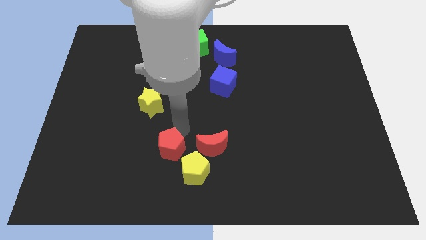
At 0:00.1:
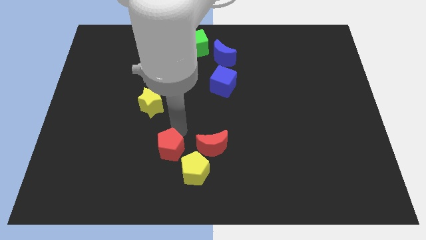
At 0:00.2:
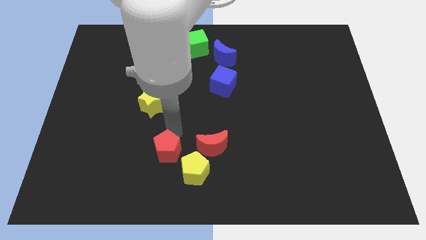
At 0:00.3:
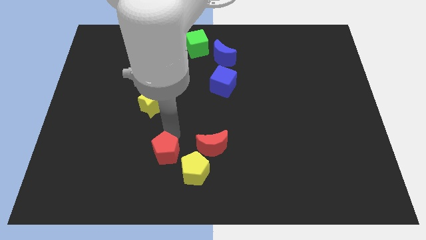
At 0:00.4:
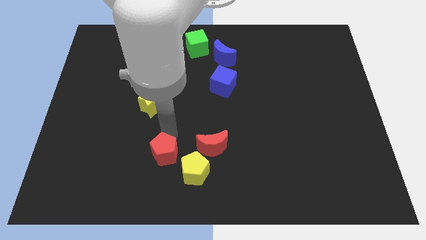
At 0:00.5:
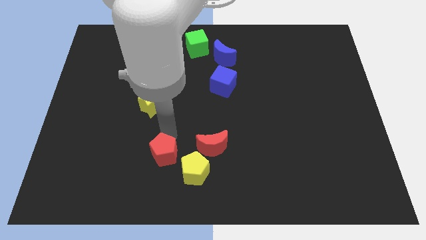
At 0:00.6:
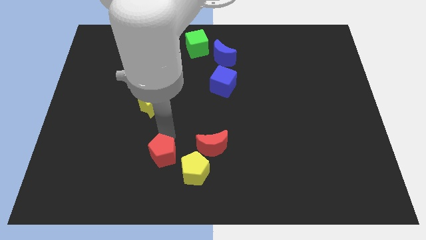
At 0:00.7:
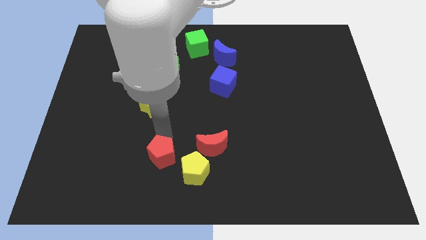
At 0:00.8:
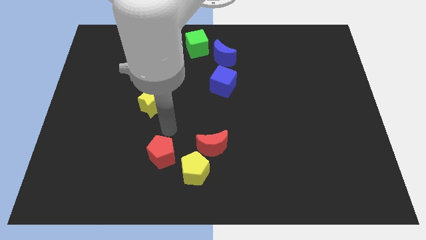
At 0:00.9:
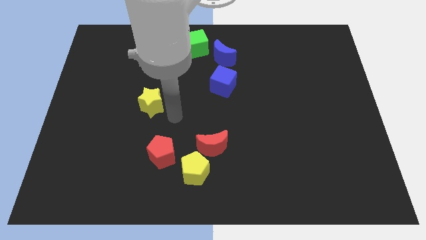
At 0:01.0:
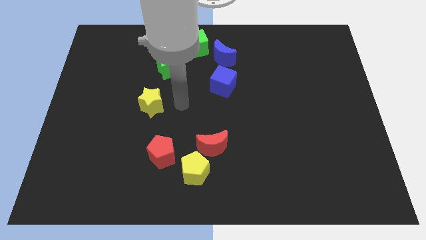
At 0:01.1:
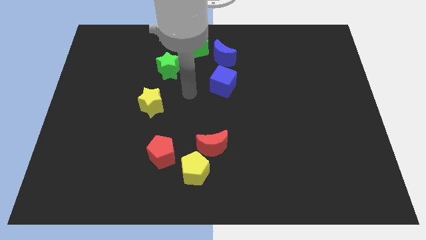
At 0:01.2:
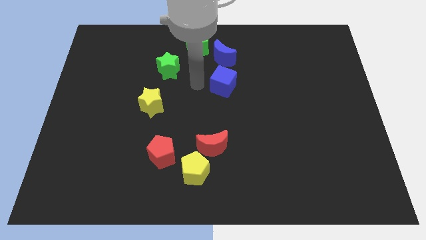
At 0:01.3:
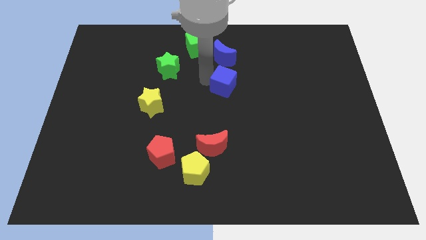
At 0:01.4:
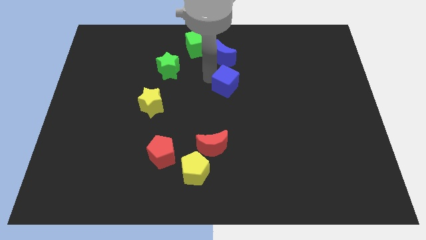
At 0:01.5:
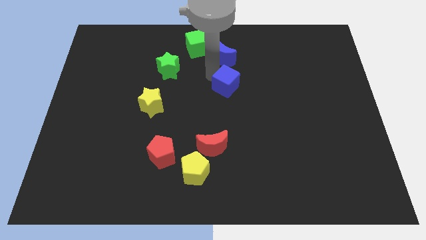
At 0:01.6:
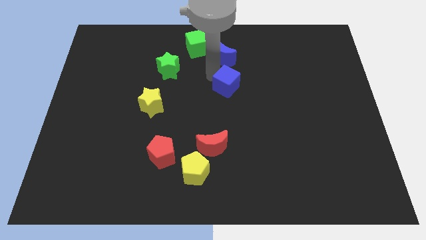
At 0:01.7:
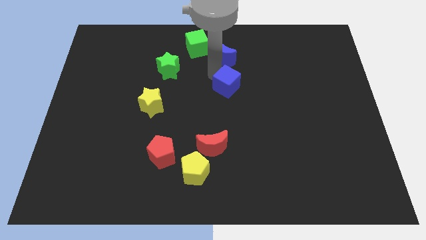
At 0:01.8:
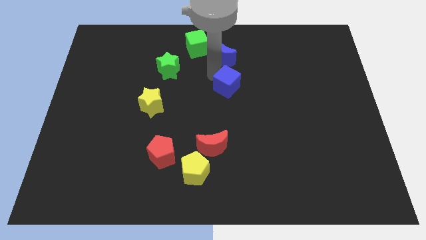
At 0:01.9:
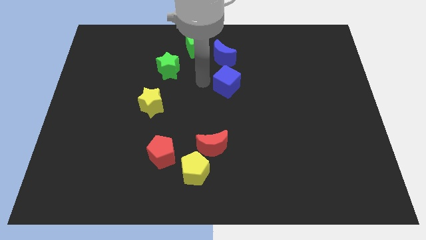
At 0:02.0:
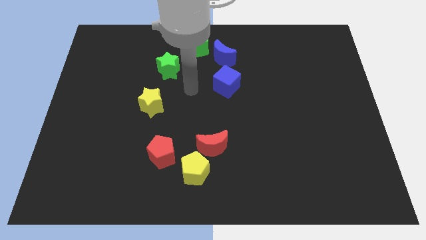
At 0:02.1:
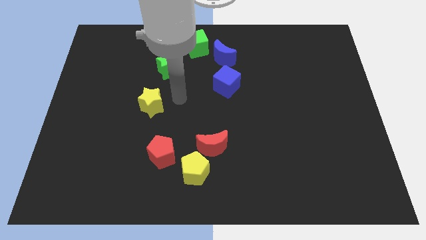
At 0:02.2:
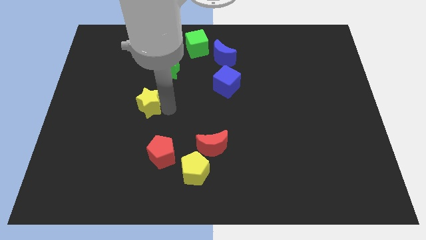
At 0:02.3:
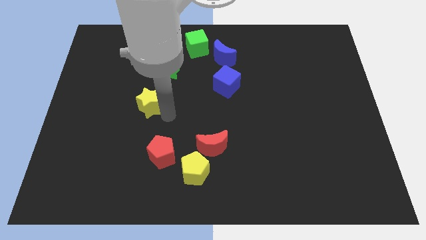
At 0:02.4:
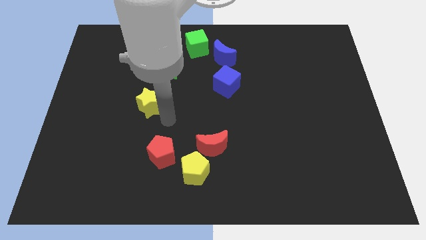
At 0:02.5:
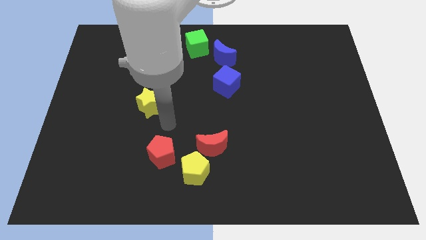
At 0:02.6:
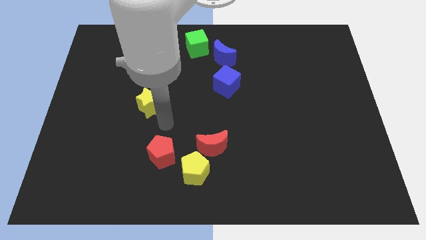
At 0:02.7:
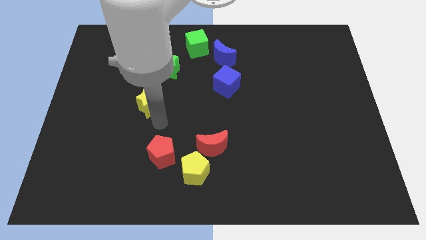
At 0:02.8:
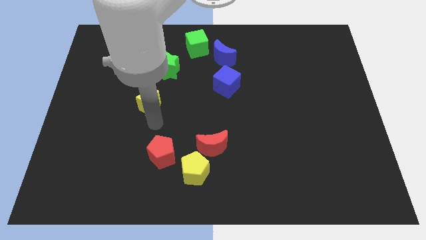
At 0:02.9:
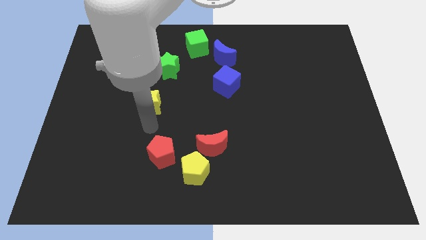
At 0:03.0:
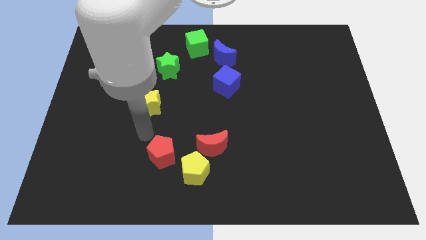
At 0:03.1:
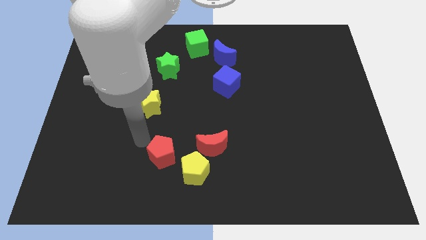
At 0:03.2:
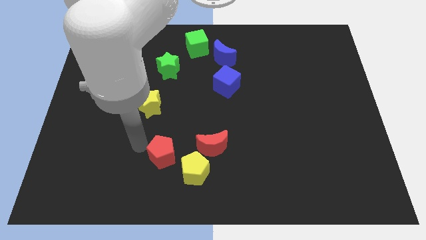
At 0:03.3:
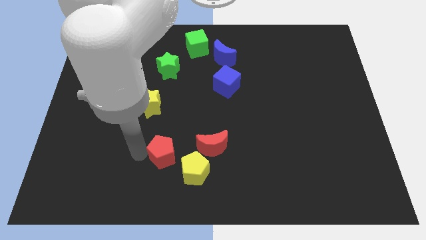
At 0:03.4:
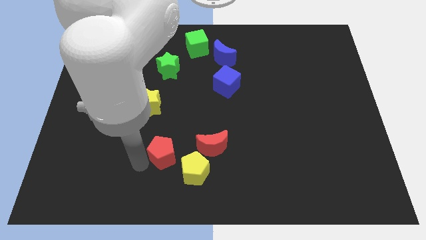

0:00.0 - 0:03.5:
adjust the blue cube yellow star along with the red pentagon

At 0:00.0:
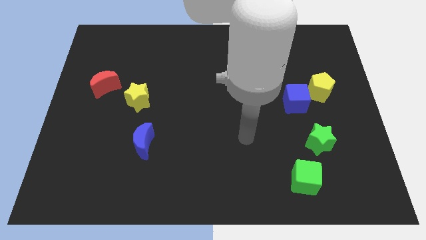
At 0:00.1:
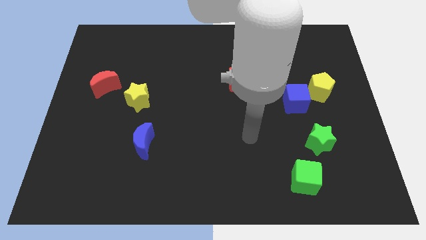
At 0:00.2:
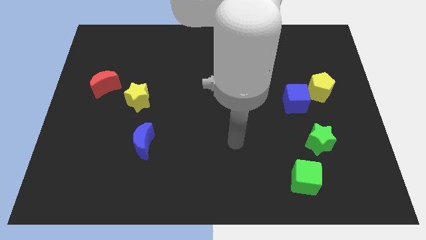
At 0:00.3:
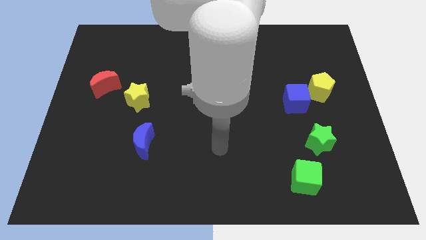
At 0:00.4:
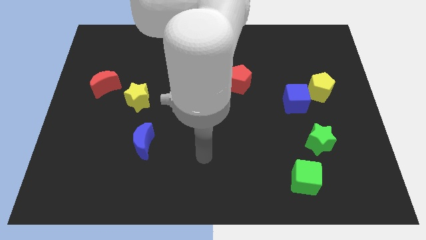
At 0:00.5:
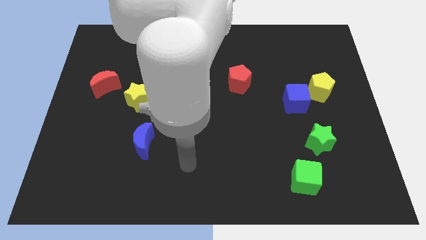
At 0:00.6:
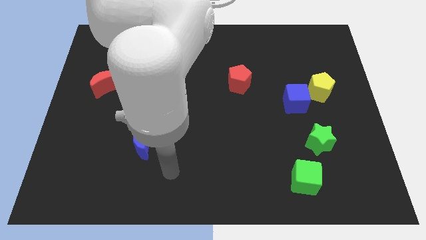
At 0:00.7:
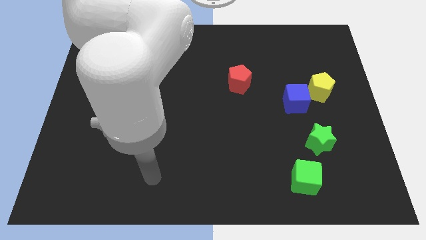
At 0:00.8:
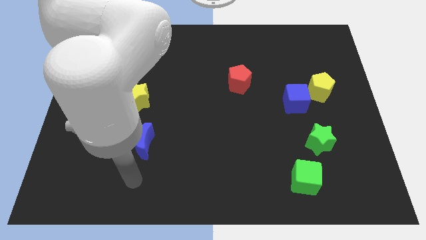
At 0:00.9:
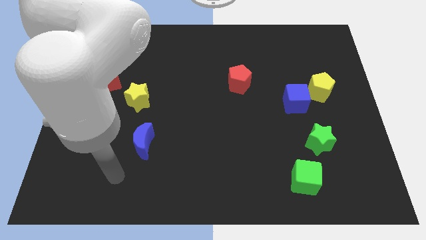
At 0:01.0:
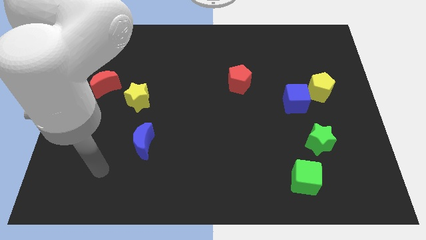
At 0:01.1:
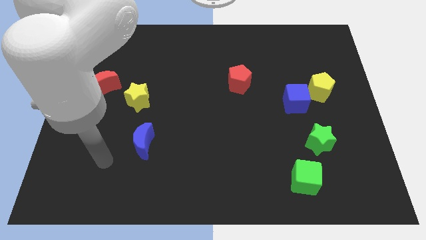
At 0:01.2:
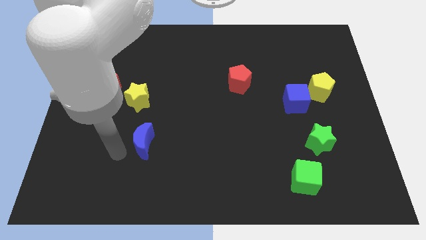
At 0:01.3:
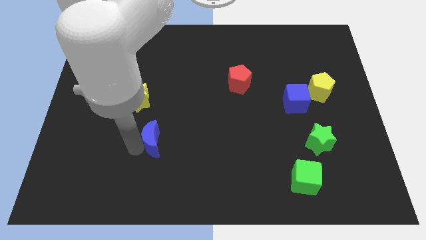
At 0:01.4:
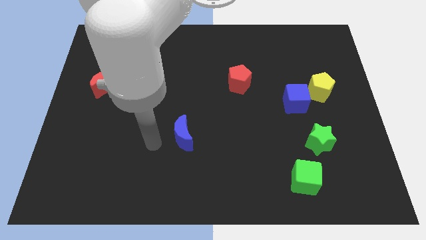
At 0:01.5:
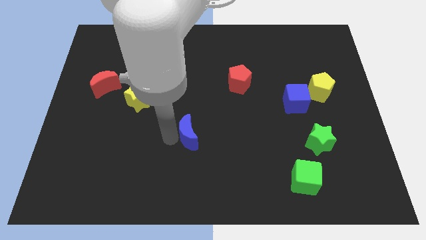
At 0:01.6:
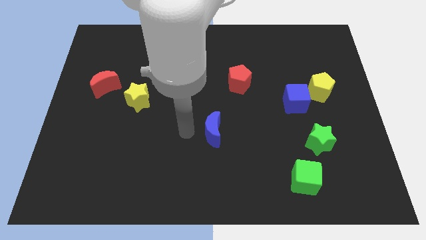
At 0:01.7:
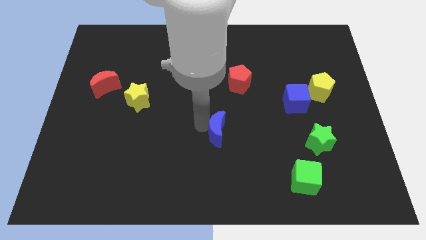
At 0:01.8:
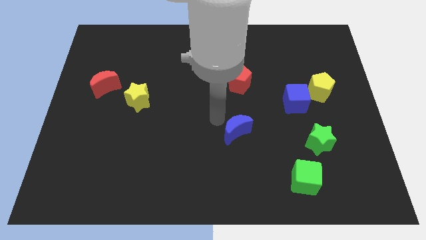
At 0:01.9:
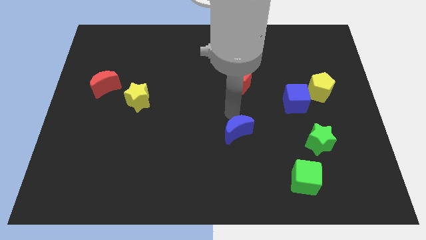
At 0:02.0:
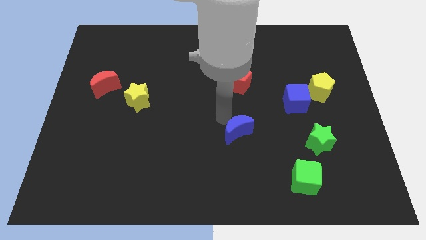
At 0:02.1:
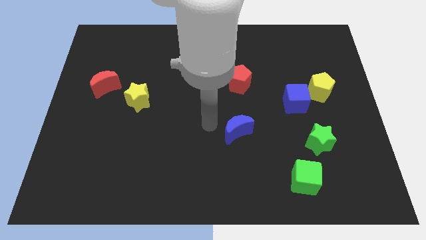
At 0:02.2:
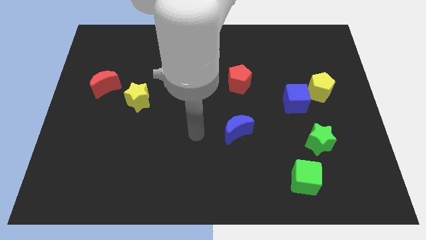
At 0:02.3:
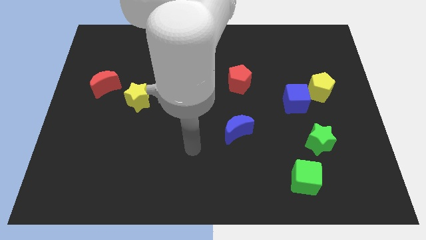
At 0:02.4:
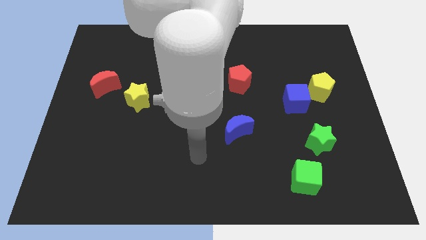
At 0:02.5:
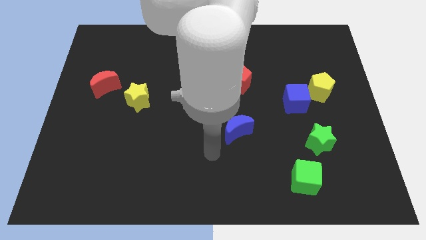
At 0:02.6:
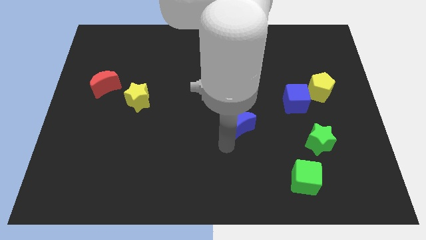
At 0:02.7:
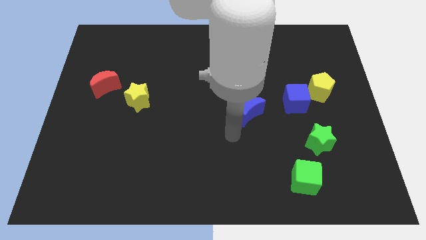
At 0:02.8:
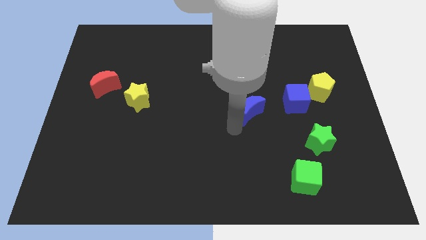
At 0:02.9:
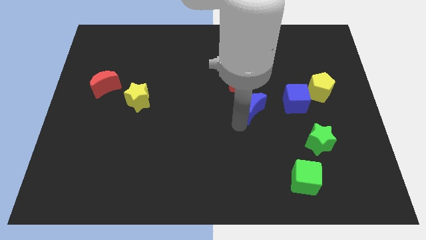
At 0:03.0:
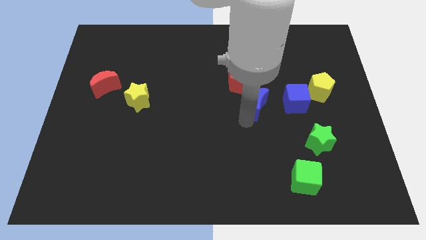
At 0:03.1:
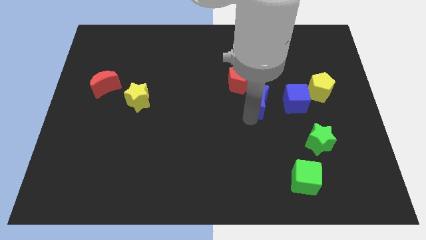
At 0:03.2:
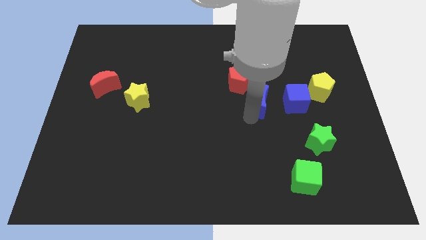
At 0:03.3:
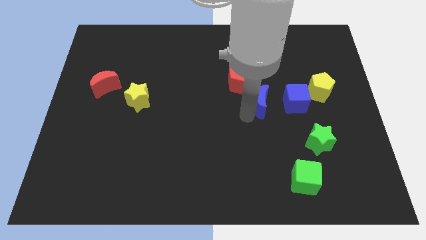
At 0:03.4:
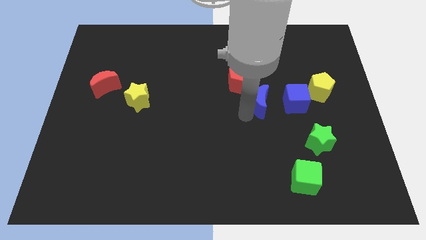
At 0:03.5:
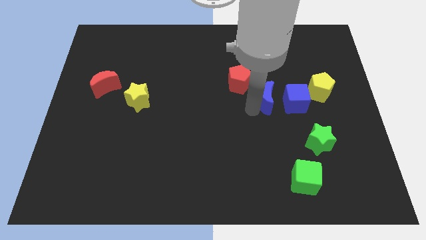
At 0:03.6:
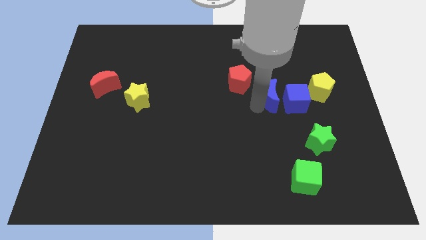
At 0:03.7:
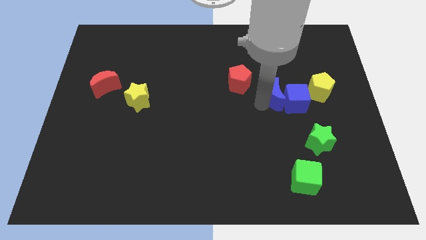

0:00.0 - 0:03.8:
move the blue moon to left side of blue cube

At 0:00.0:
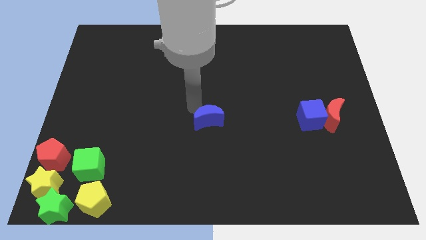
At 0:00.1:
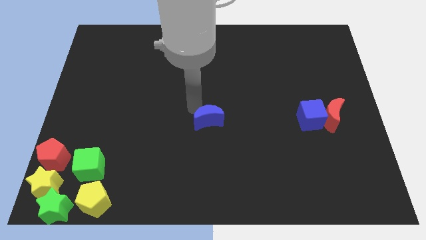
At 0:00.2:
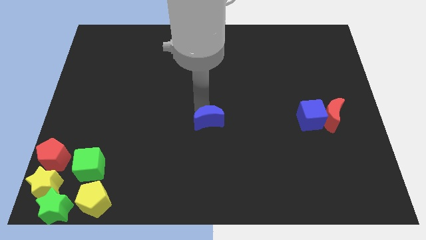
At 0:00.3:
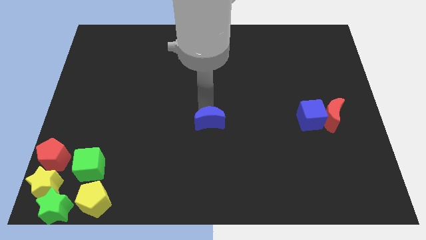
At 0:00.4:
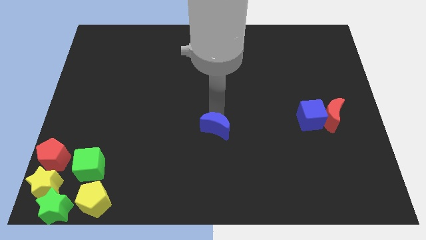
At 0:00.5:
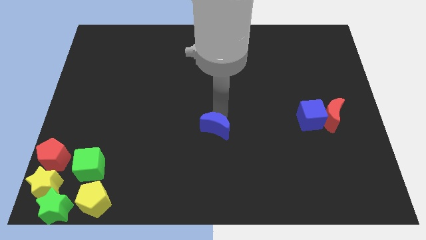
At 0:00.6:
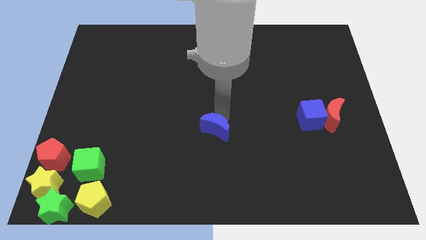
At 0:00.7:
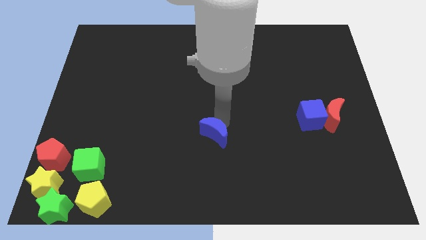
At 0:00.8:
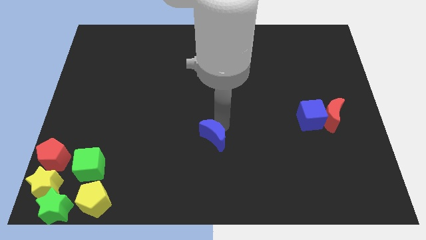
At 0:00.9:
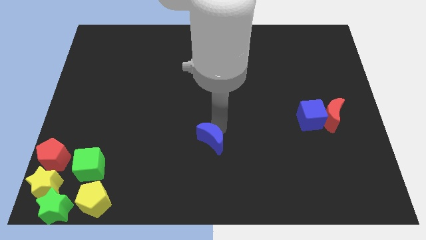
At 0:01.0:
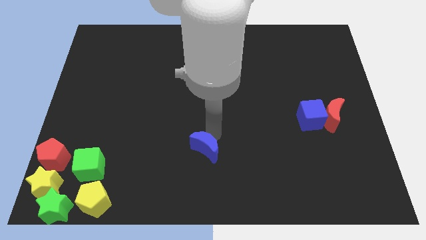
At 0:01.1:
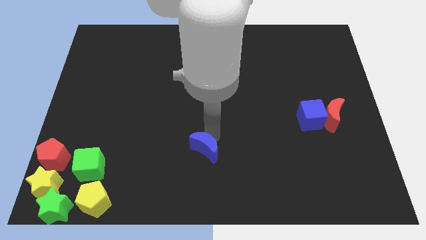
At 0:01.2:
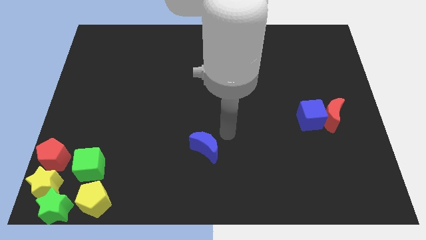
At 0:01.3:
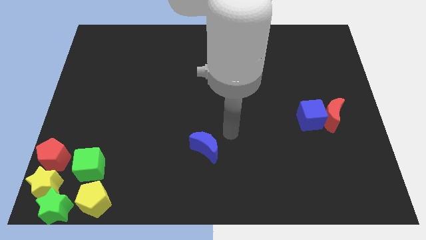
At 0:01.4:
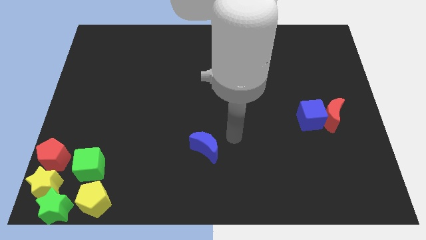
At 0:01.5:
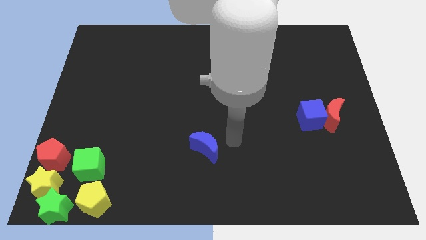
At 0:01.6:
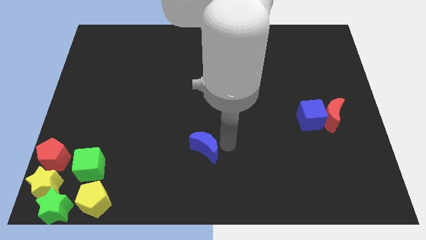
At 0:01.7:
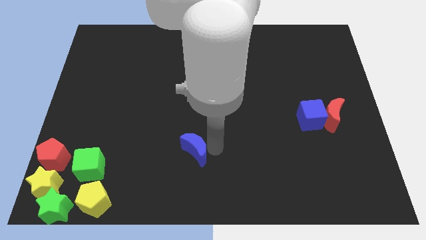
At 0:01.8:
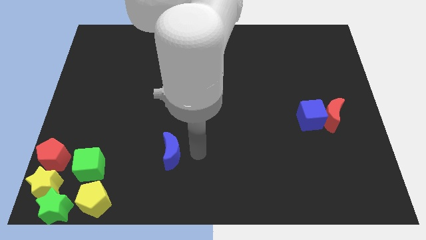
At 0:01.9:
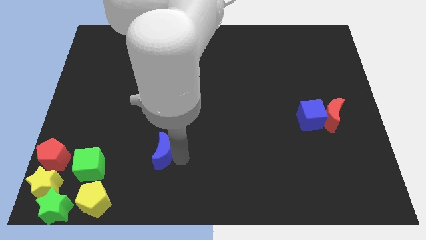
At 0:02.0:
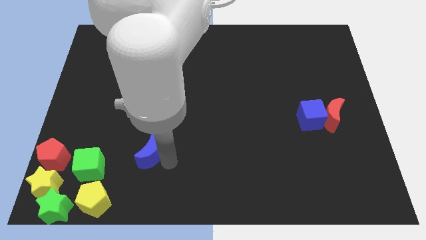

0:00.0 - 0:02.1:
move the blue crescent diagonal above the yellow pentagon
